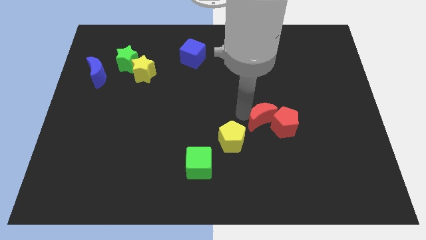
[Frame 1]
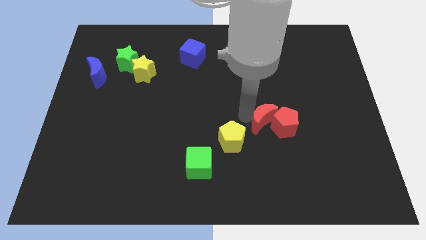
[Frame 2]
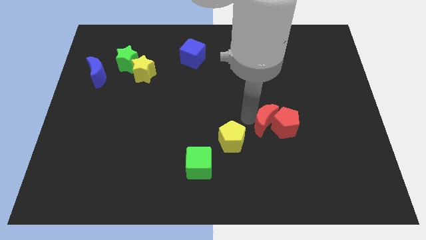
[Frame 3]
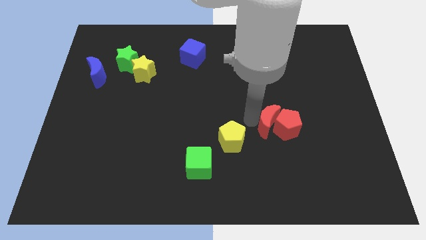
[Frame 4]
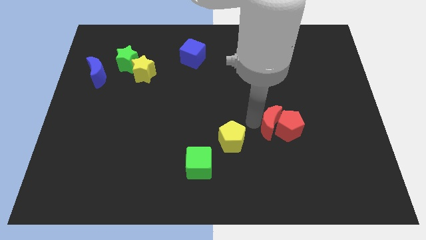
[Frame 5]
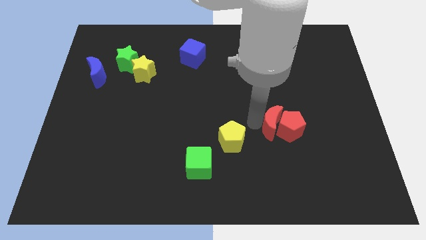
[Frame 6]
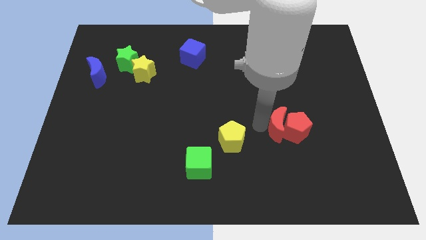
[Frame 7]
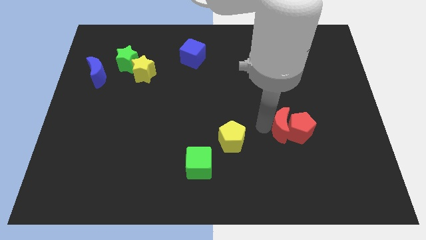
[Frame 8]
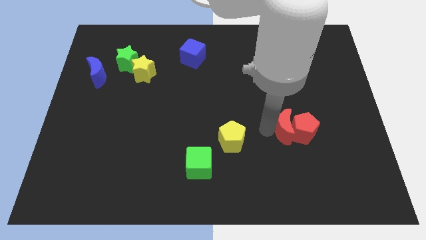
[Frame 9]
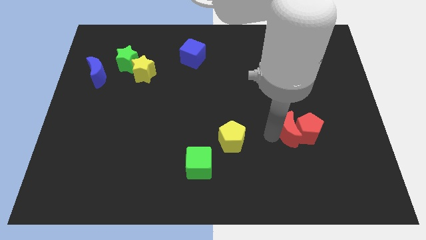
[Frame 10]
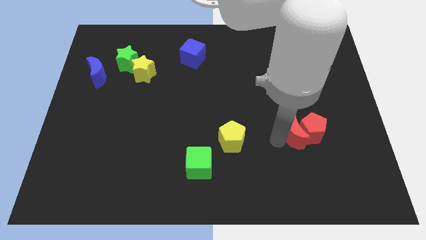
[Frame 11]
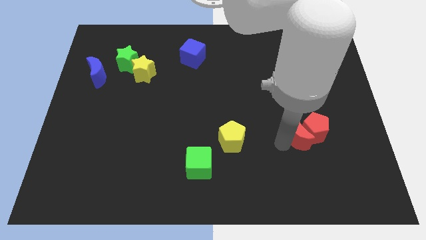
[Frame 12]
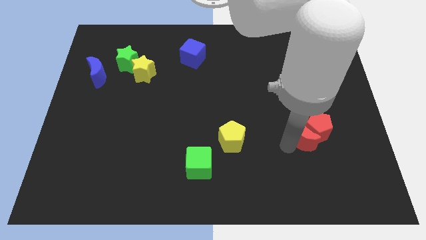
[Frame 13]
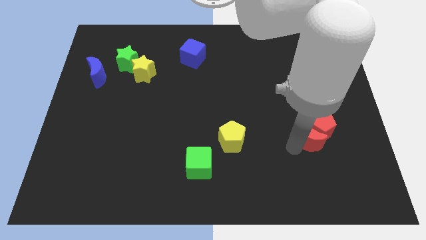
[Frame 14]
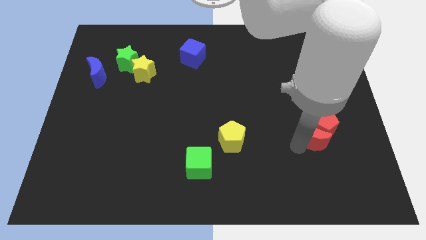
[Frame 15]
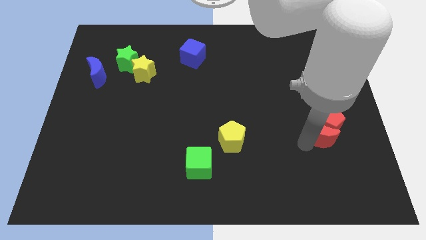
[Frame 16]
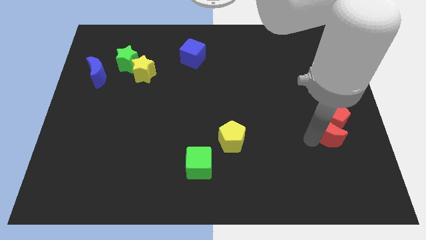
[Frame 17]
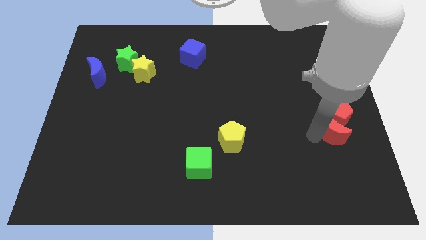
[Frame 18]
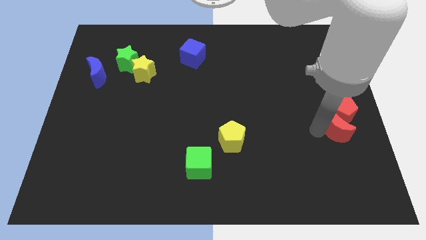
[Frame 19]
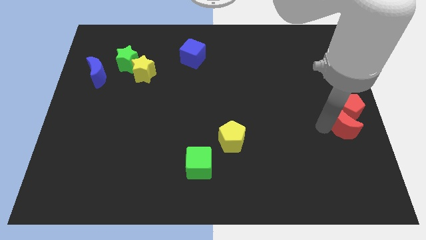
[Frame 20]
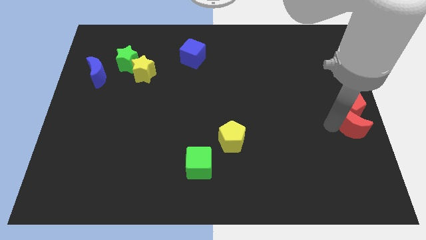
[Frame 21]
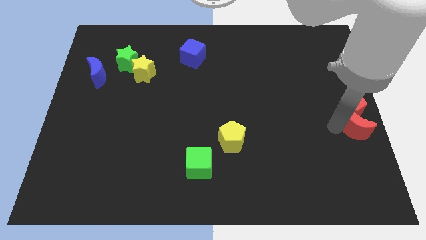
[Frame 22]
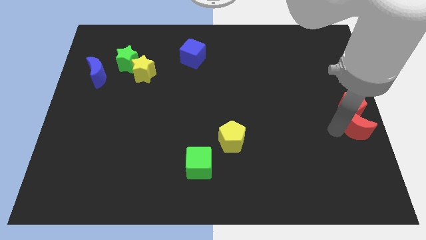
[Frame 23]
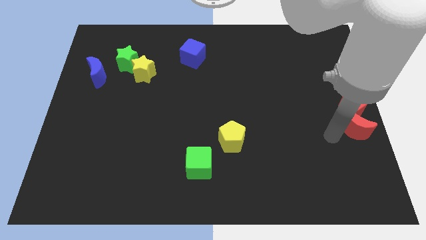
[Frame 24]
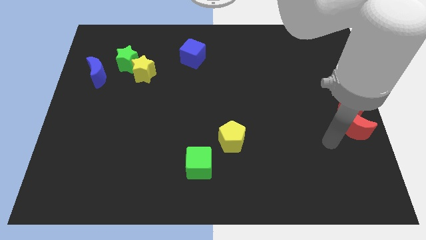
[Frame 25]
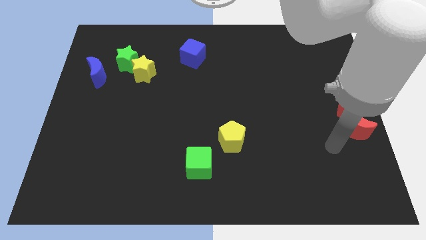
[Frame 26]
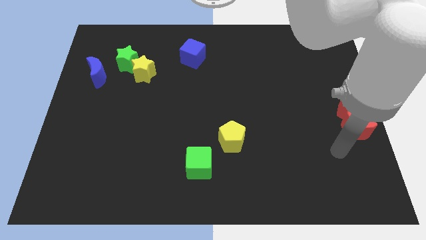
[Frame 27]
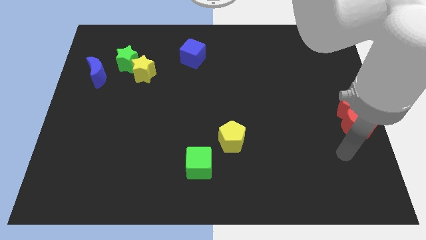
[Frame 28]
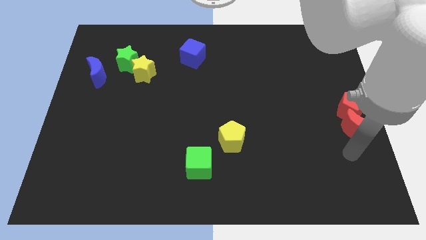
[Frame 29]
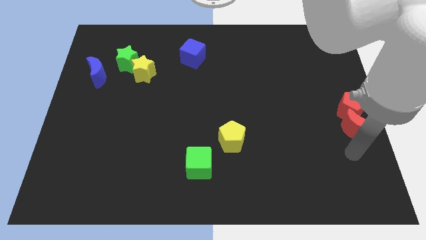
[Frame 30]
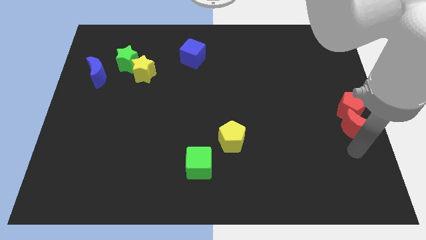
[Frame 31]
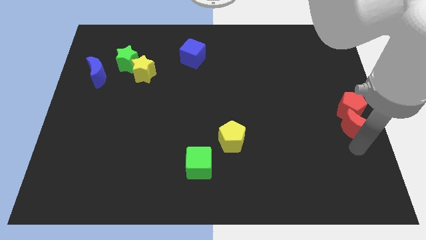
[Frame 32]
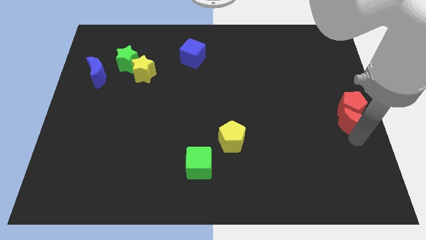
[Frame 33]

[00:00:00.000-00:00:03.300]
move the red blocks together to the center right of the board

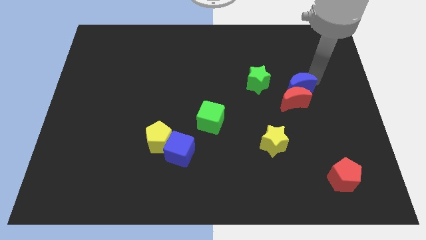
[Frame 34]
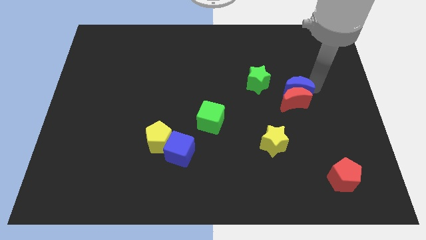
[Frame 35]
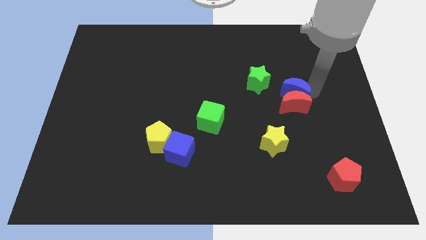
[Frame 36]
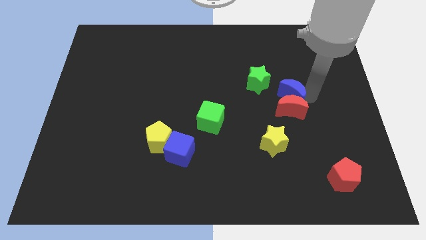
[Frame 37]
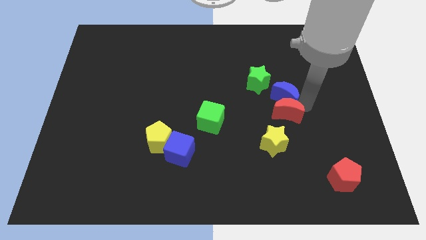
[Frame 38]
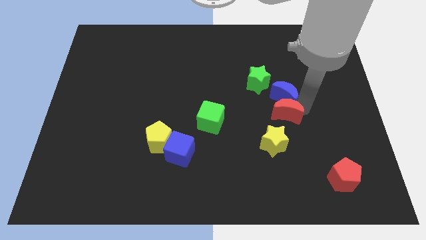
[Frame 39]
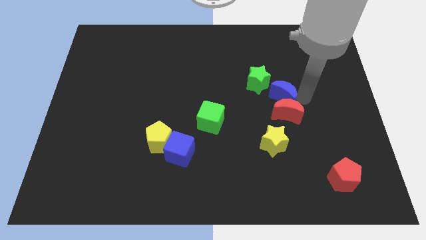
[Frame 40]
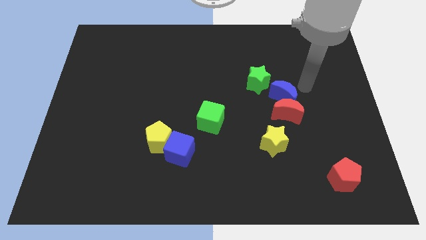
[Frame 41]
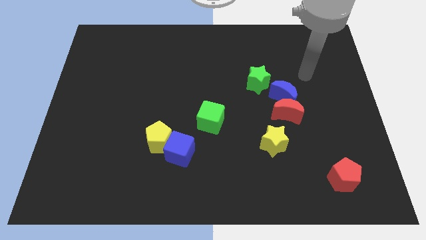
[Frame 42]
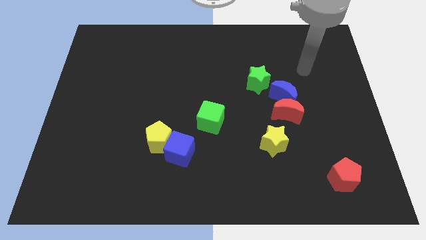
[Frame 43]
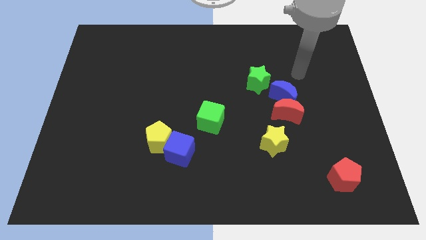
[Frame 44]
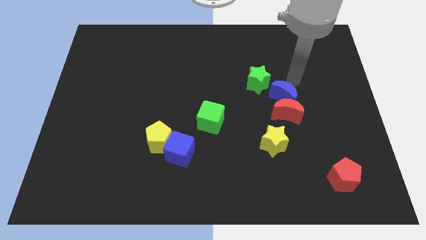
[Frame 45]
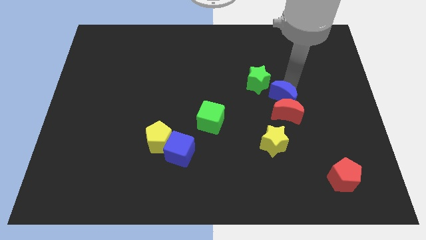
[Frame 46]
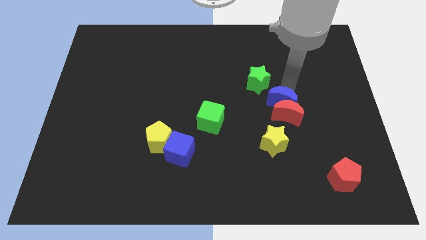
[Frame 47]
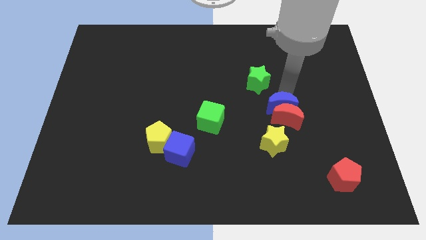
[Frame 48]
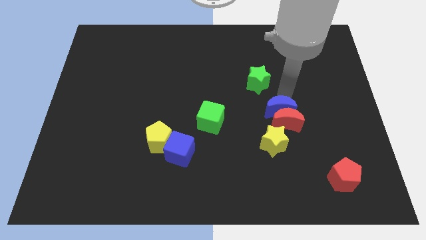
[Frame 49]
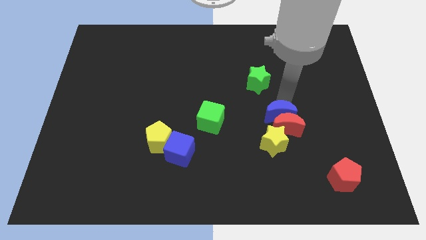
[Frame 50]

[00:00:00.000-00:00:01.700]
push blue moon into red moon

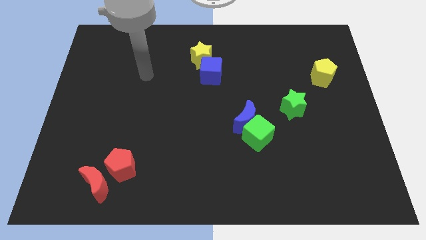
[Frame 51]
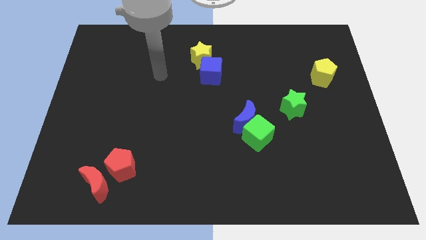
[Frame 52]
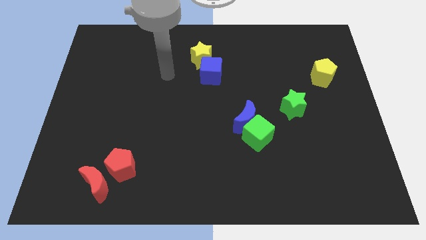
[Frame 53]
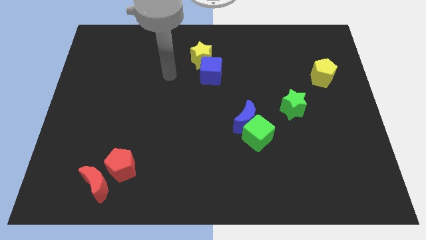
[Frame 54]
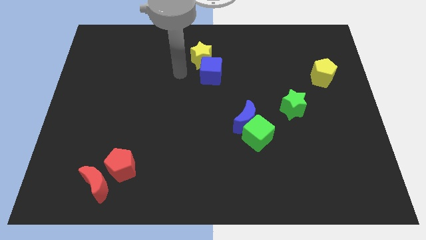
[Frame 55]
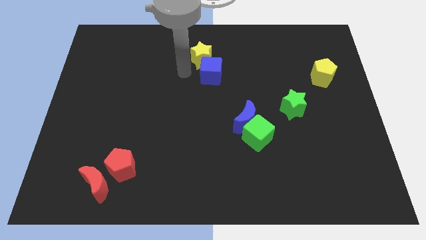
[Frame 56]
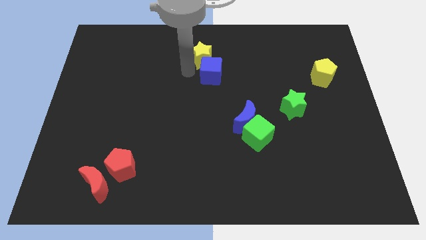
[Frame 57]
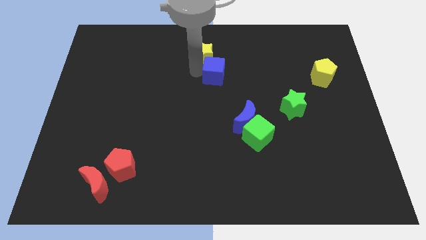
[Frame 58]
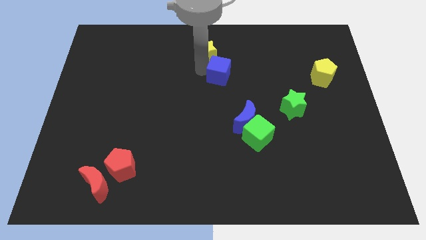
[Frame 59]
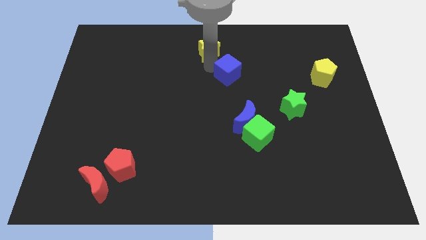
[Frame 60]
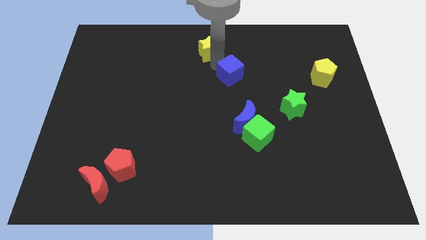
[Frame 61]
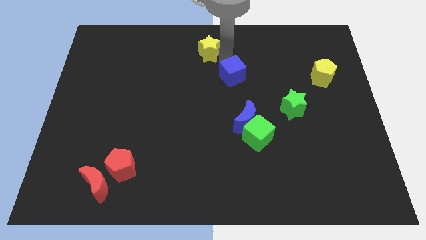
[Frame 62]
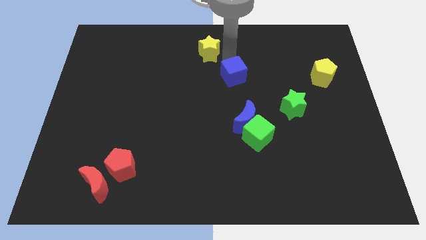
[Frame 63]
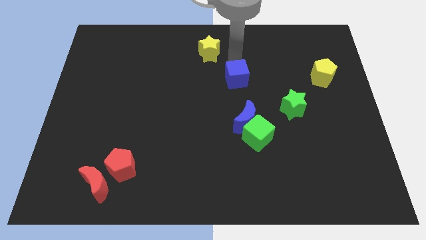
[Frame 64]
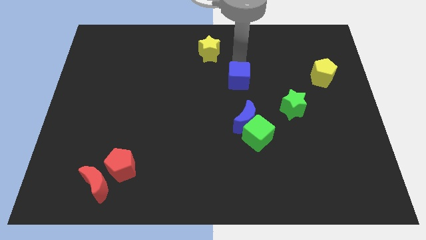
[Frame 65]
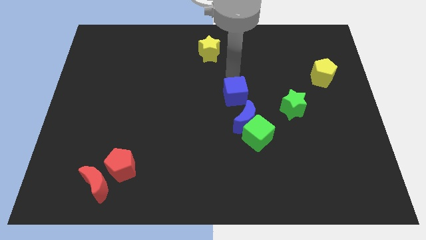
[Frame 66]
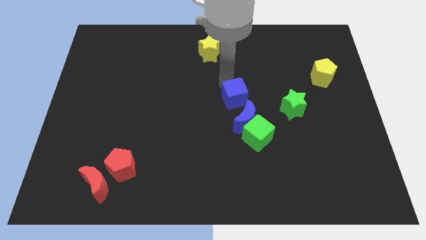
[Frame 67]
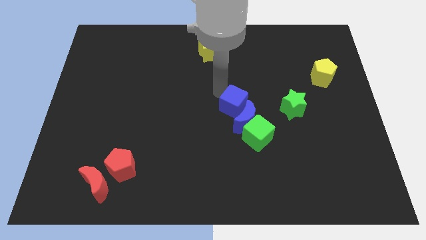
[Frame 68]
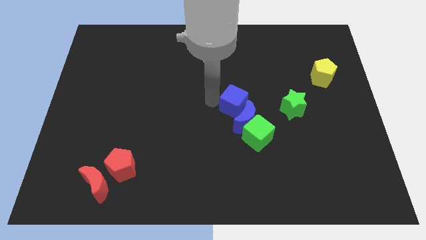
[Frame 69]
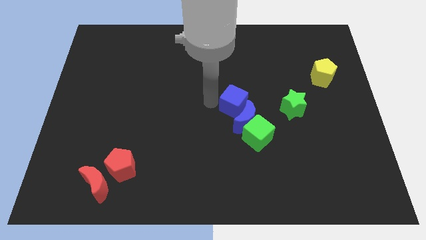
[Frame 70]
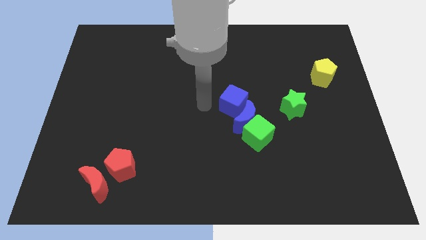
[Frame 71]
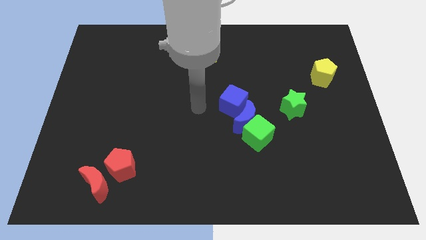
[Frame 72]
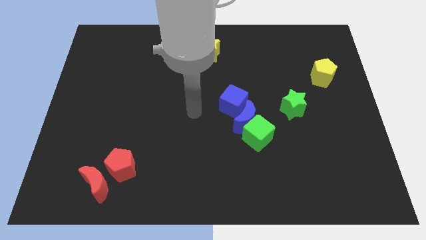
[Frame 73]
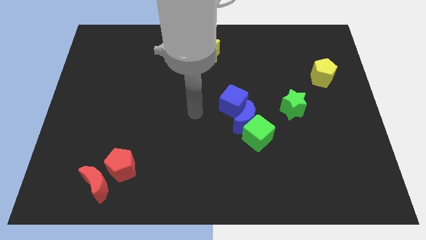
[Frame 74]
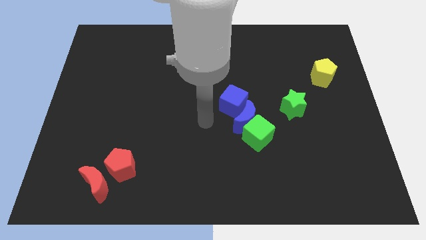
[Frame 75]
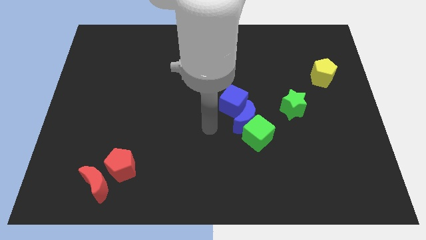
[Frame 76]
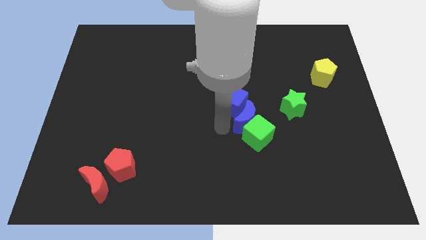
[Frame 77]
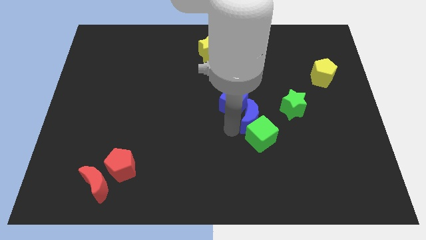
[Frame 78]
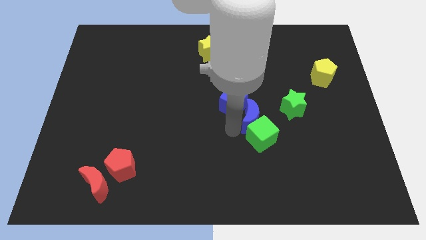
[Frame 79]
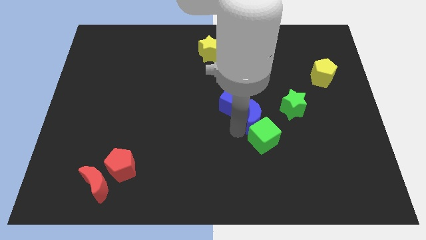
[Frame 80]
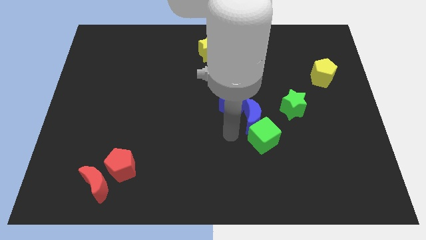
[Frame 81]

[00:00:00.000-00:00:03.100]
push the blue cube into the blue moon

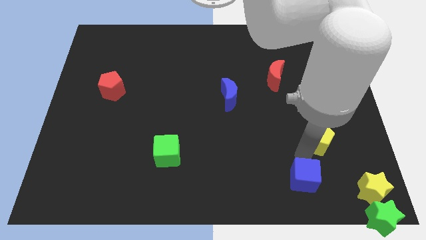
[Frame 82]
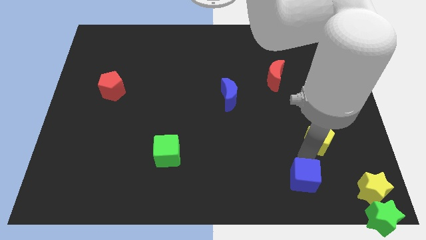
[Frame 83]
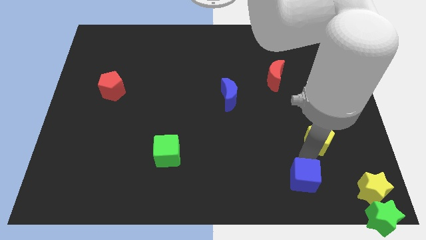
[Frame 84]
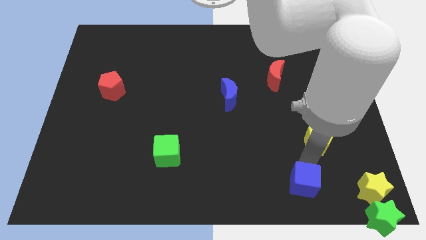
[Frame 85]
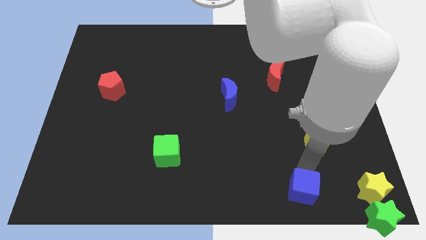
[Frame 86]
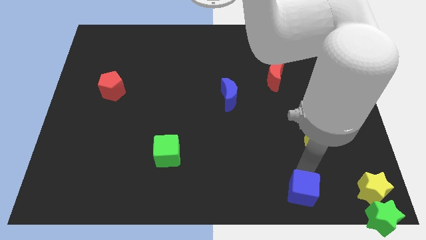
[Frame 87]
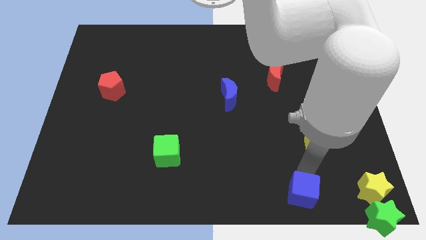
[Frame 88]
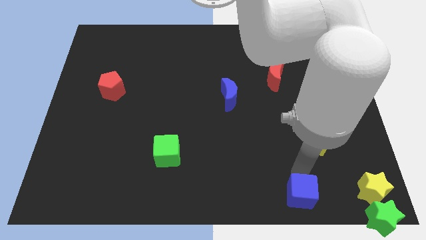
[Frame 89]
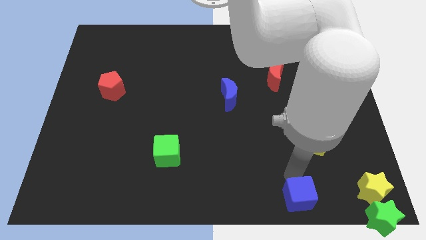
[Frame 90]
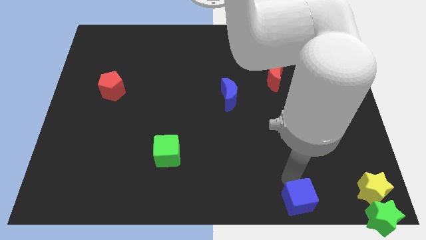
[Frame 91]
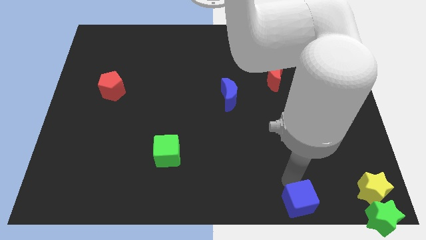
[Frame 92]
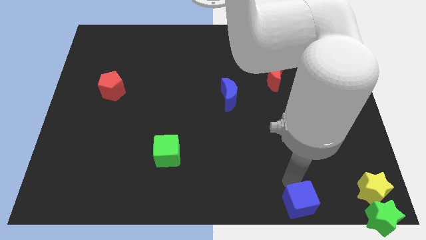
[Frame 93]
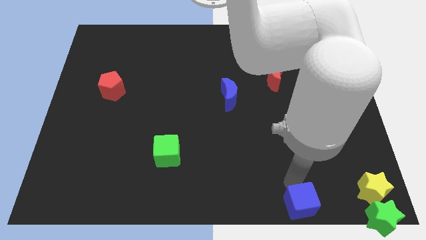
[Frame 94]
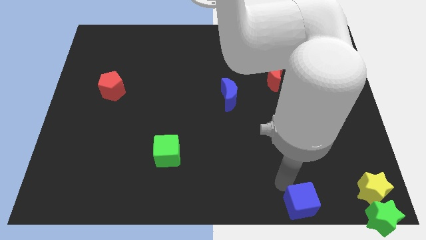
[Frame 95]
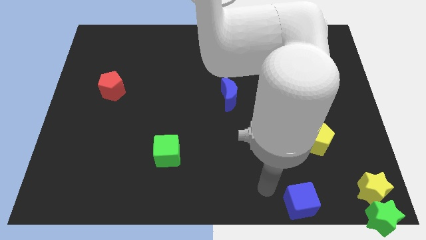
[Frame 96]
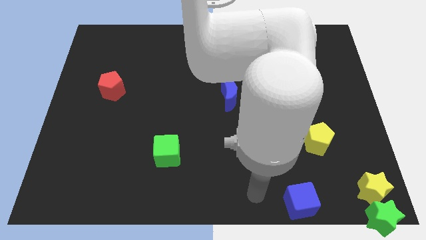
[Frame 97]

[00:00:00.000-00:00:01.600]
push blue cube to bottom
